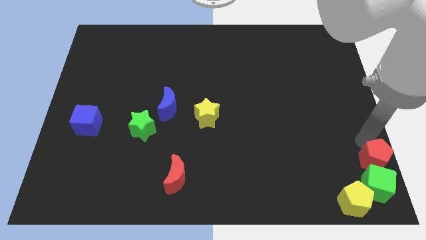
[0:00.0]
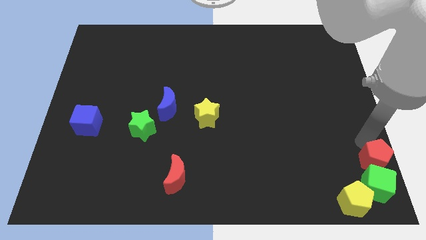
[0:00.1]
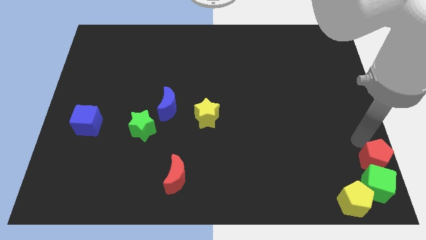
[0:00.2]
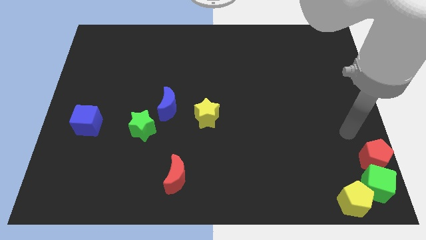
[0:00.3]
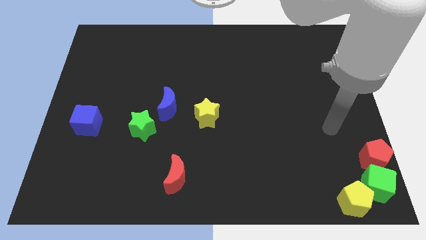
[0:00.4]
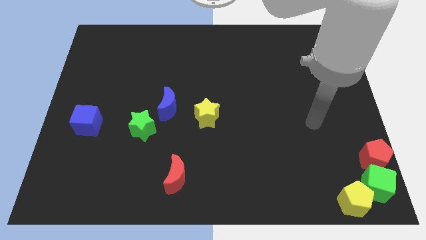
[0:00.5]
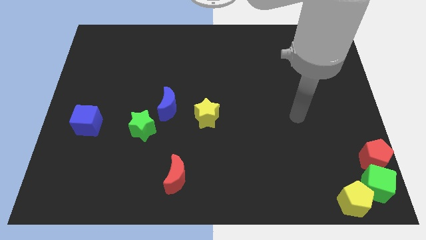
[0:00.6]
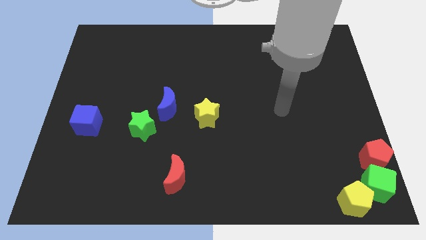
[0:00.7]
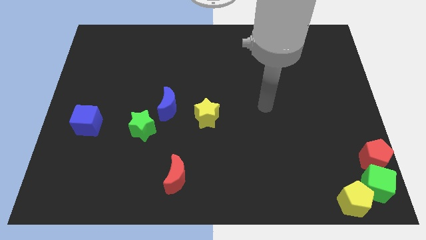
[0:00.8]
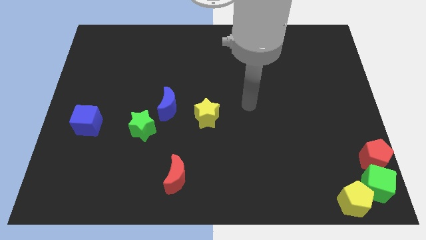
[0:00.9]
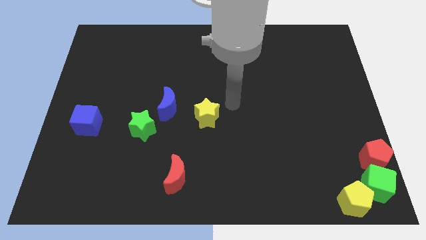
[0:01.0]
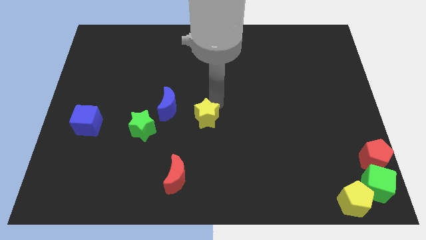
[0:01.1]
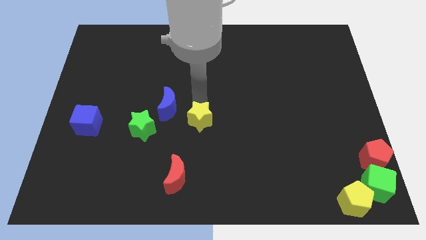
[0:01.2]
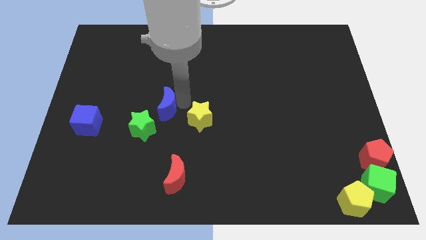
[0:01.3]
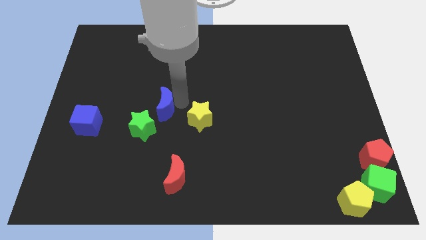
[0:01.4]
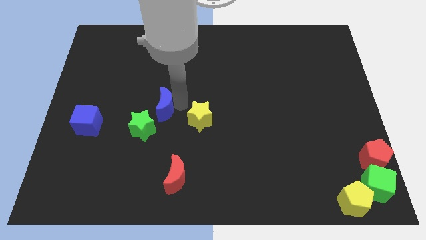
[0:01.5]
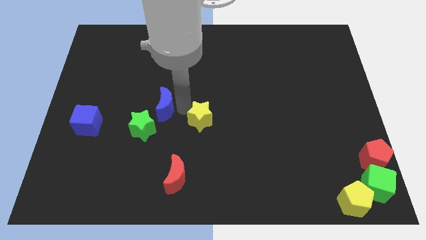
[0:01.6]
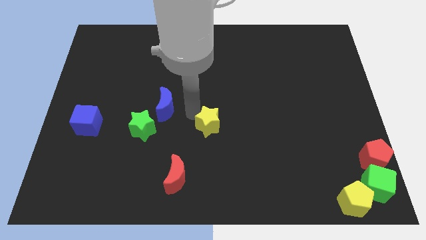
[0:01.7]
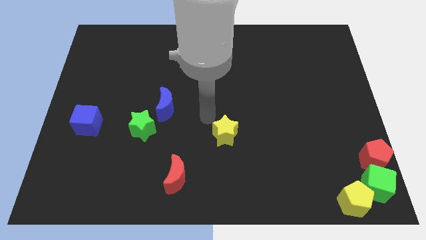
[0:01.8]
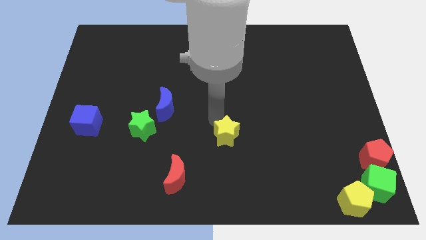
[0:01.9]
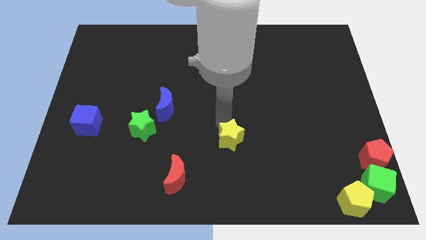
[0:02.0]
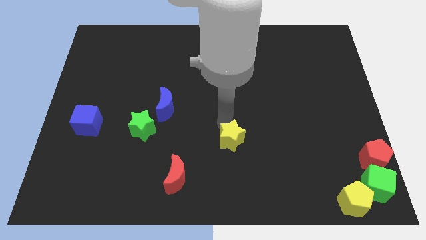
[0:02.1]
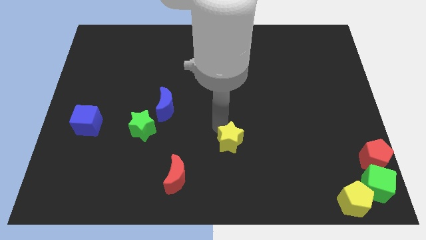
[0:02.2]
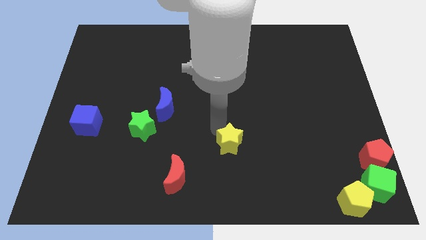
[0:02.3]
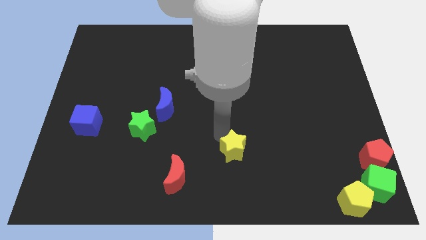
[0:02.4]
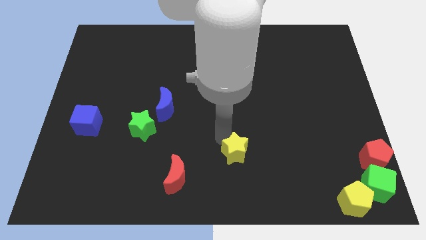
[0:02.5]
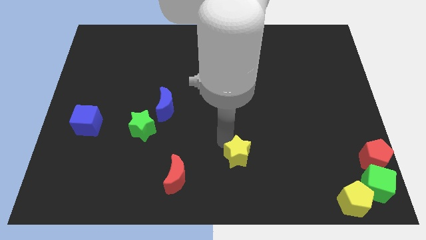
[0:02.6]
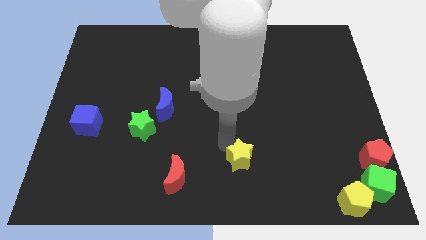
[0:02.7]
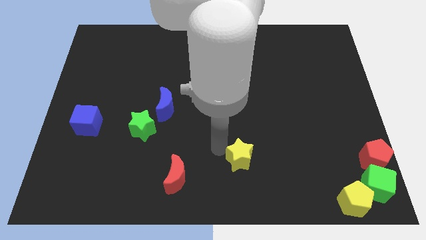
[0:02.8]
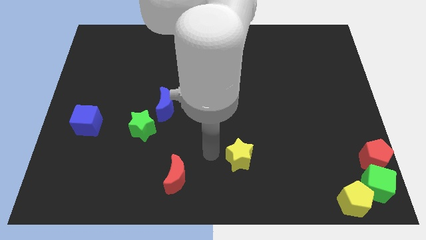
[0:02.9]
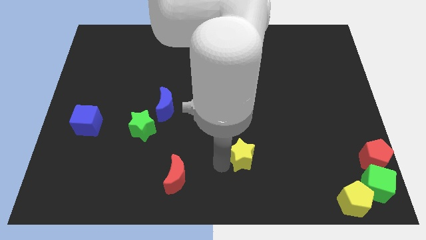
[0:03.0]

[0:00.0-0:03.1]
push the yellow star to the bottom

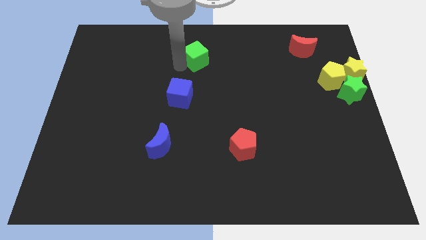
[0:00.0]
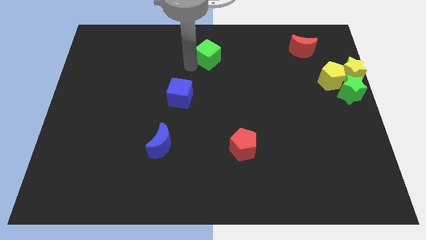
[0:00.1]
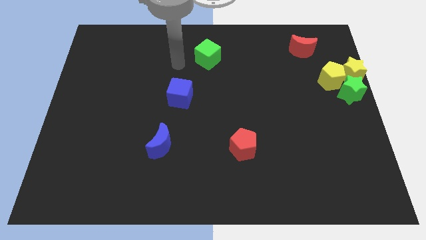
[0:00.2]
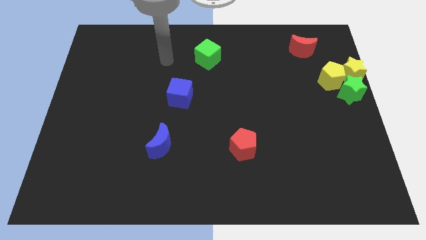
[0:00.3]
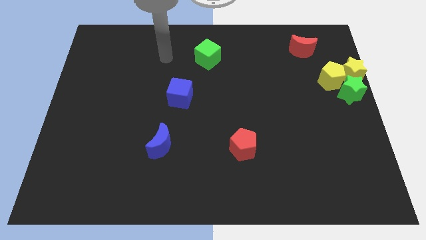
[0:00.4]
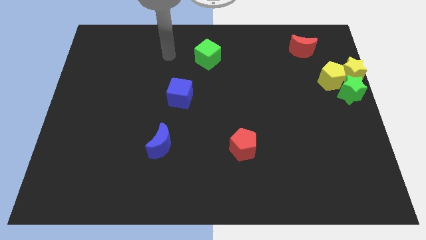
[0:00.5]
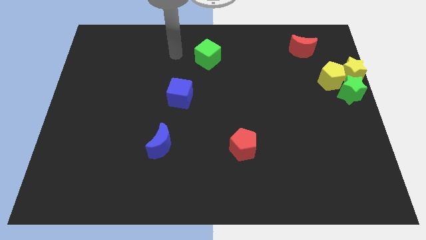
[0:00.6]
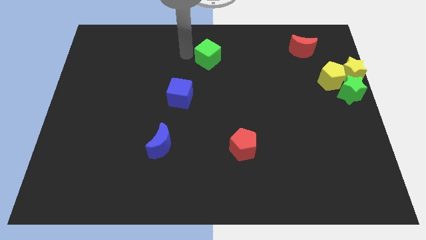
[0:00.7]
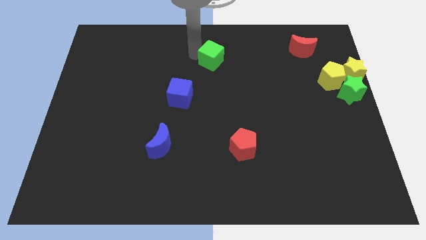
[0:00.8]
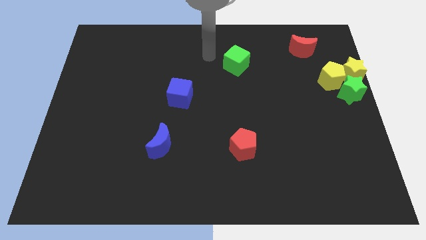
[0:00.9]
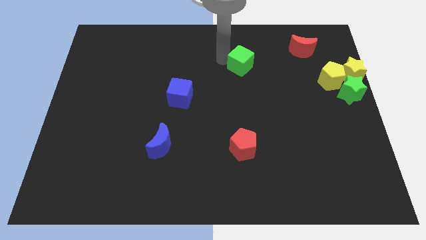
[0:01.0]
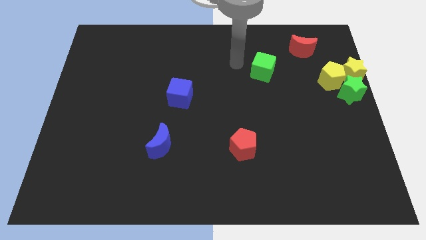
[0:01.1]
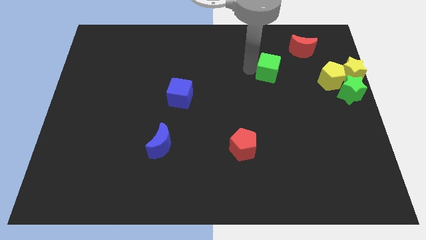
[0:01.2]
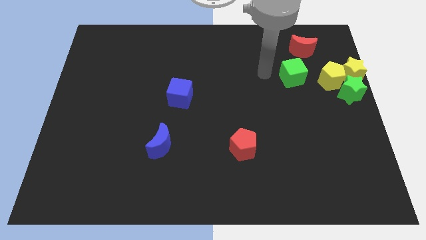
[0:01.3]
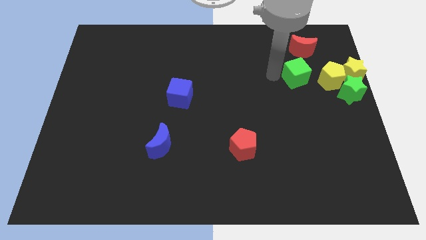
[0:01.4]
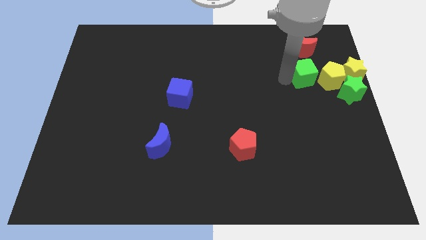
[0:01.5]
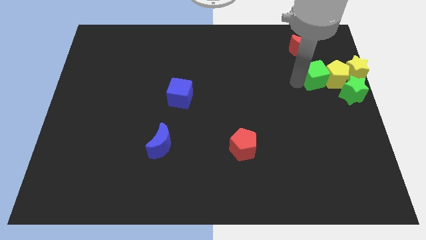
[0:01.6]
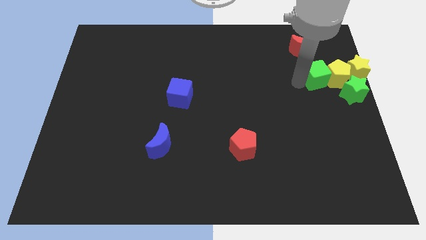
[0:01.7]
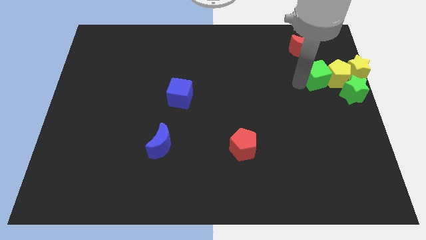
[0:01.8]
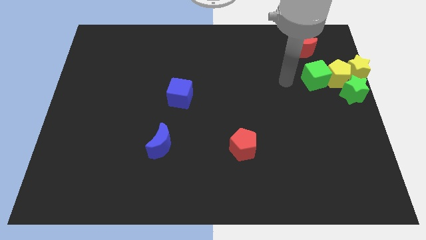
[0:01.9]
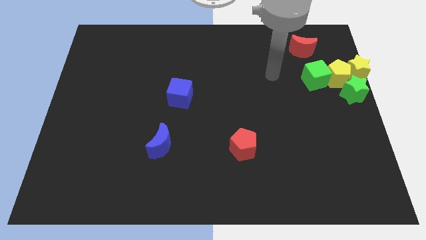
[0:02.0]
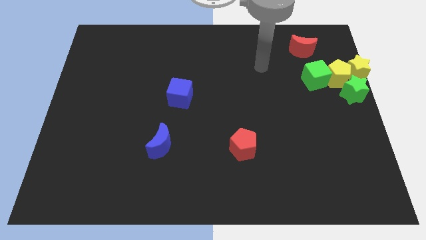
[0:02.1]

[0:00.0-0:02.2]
add green cube into yellow pentagon

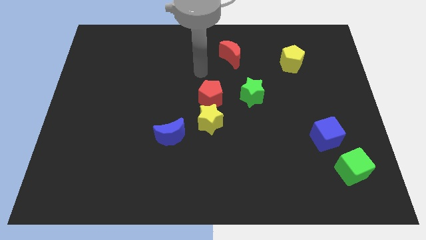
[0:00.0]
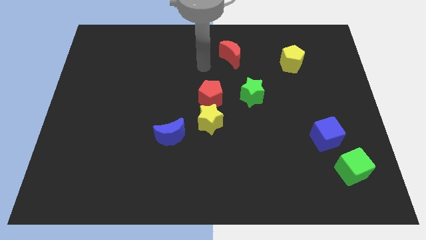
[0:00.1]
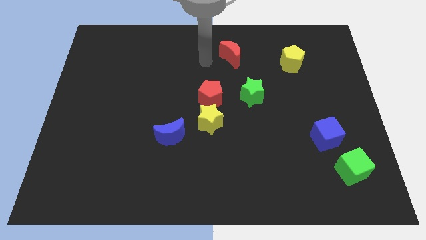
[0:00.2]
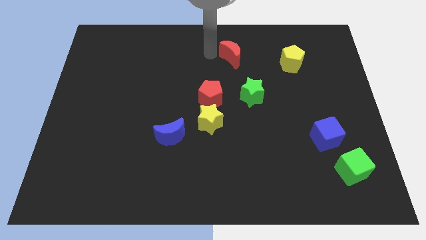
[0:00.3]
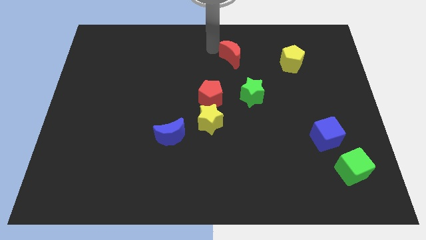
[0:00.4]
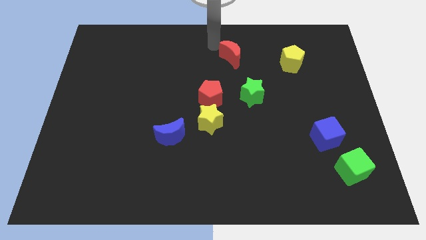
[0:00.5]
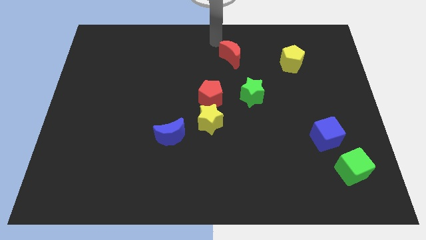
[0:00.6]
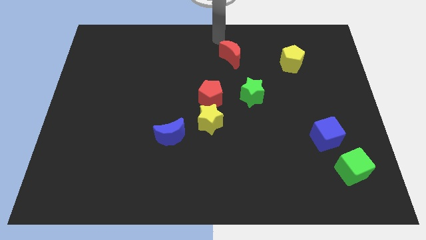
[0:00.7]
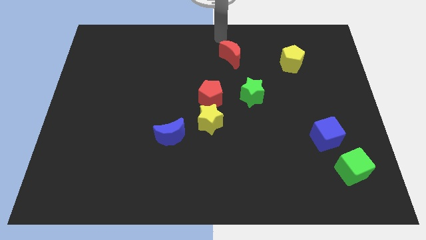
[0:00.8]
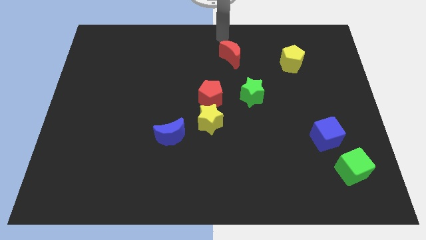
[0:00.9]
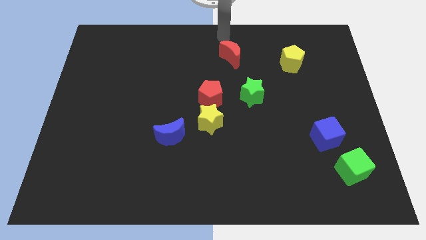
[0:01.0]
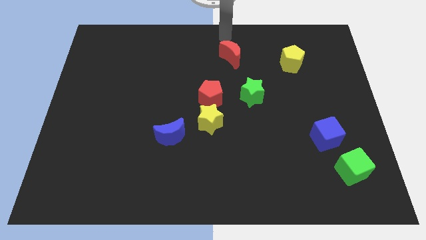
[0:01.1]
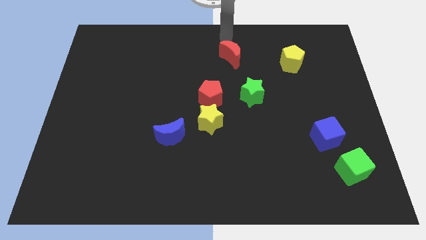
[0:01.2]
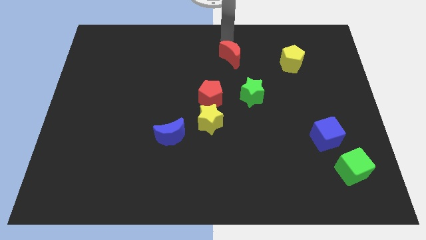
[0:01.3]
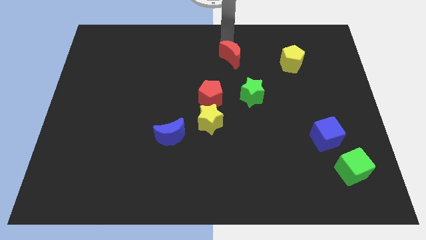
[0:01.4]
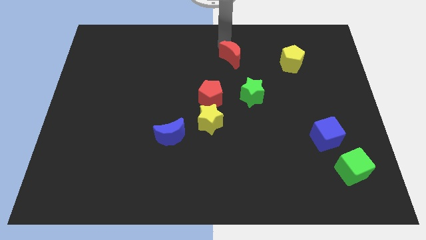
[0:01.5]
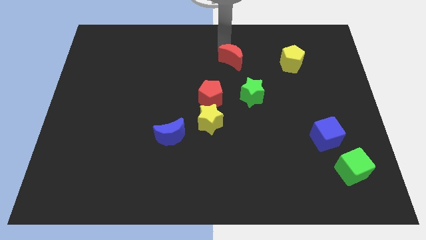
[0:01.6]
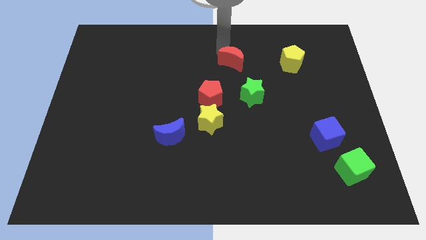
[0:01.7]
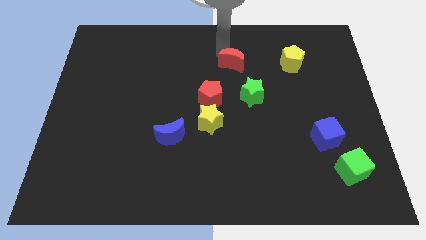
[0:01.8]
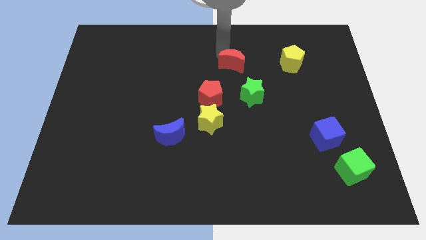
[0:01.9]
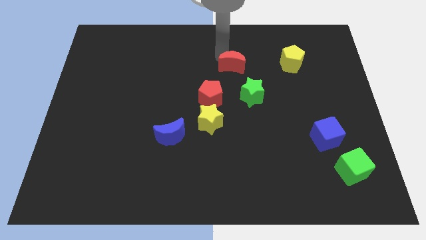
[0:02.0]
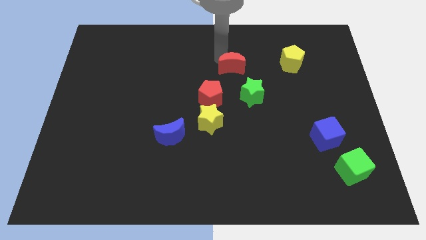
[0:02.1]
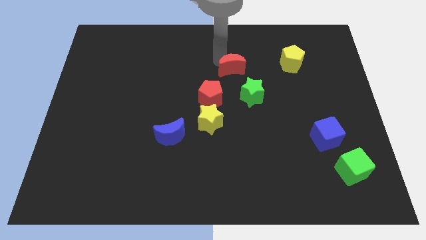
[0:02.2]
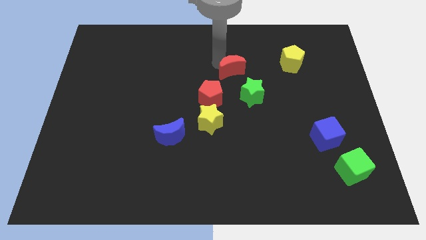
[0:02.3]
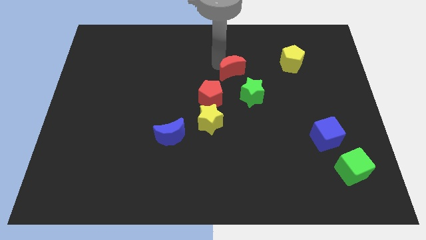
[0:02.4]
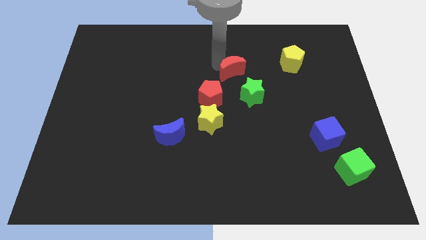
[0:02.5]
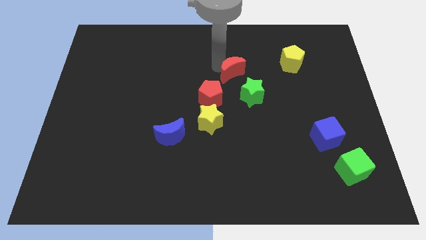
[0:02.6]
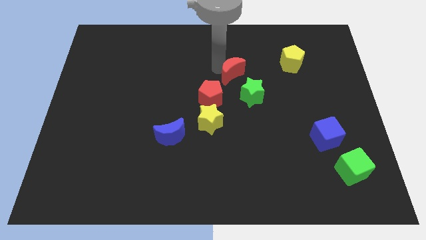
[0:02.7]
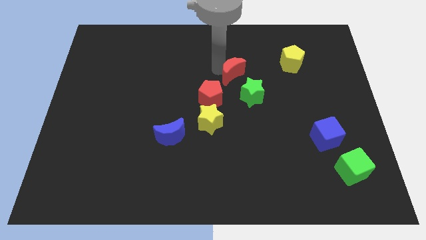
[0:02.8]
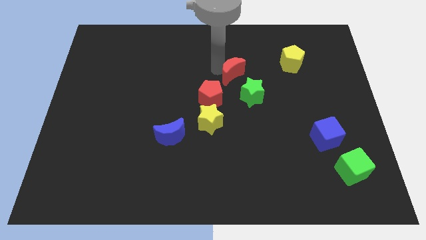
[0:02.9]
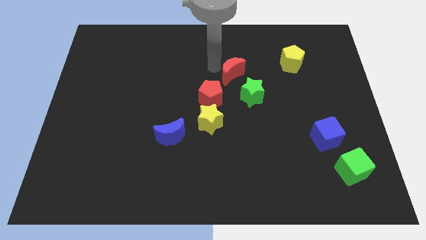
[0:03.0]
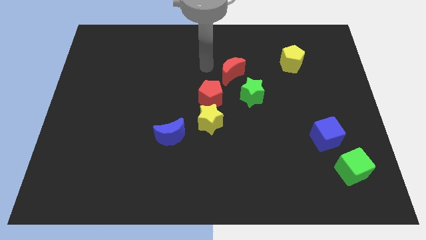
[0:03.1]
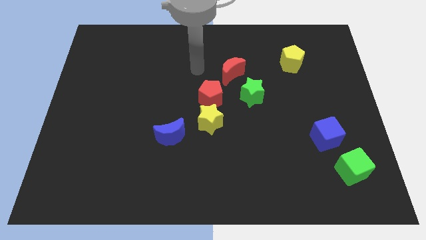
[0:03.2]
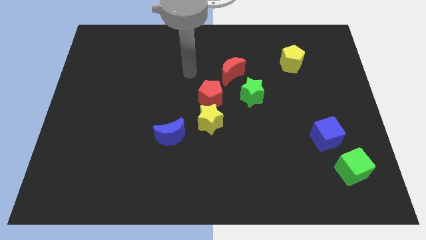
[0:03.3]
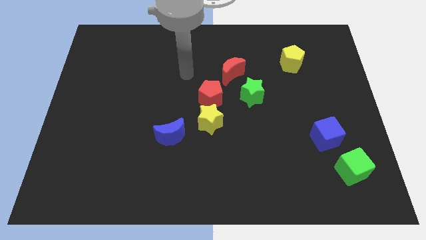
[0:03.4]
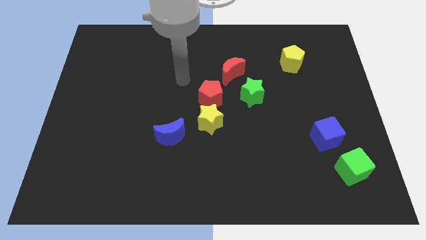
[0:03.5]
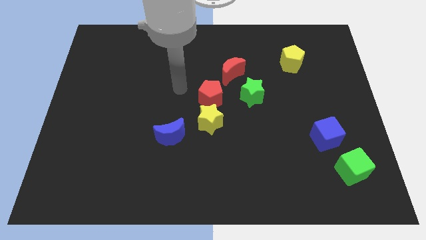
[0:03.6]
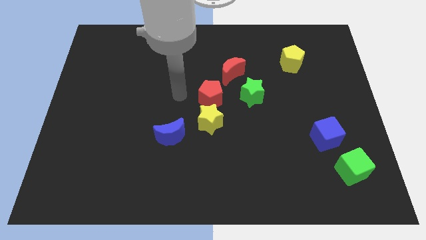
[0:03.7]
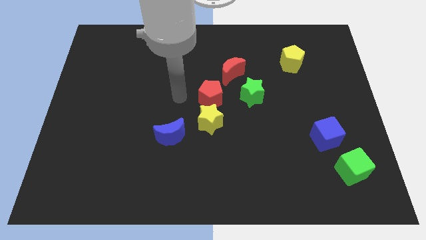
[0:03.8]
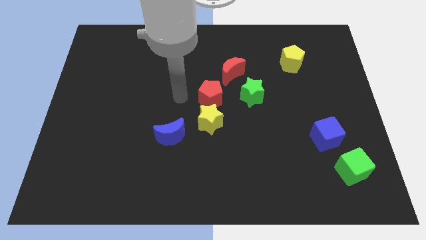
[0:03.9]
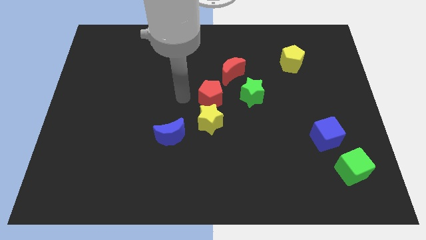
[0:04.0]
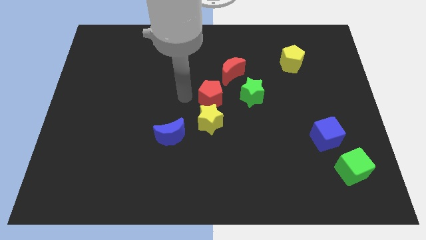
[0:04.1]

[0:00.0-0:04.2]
place the red crescent above the green star
